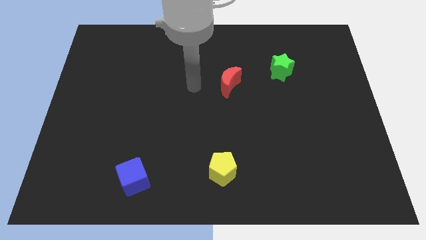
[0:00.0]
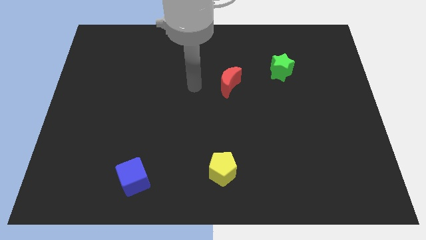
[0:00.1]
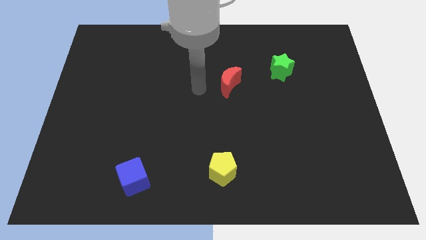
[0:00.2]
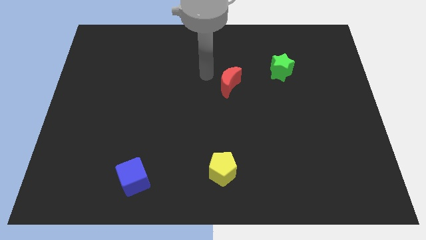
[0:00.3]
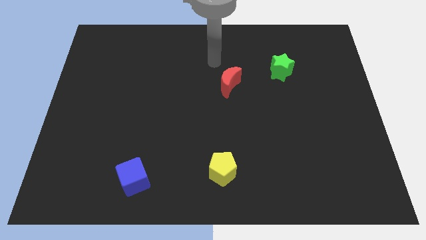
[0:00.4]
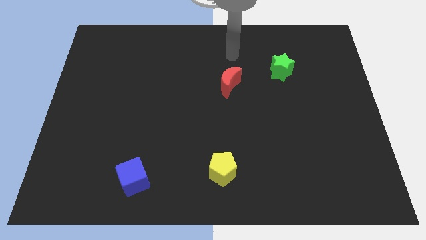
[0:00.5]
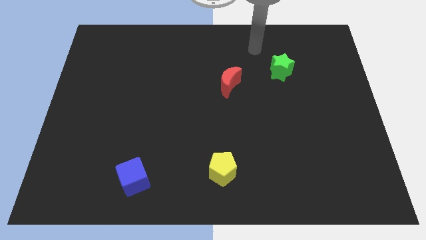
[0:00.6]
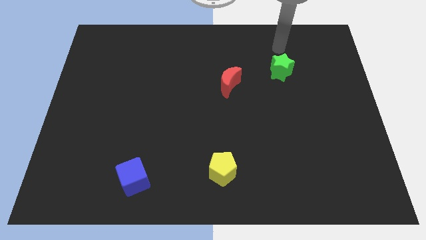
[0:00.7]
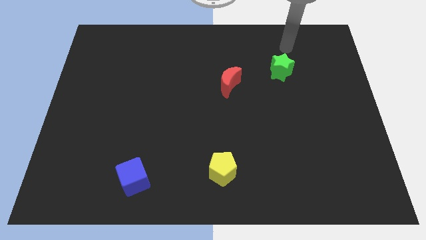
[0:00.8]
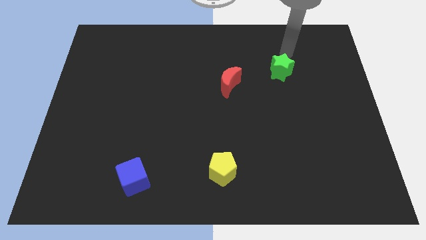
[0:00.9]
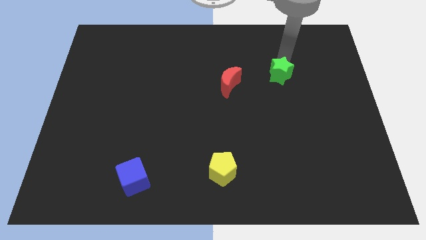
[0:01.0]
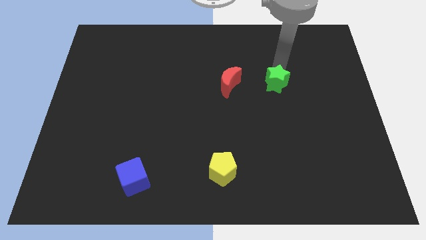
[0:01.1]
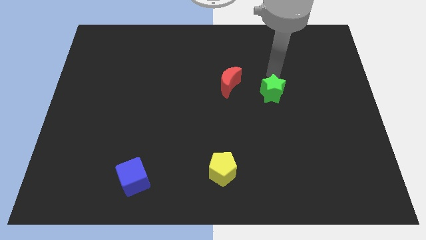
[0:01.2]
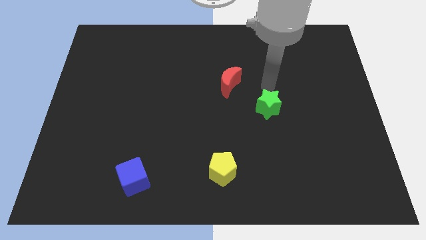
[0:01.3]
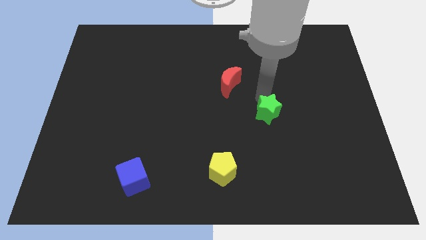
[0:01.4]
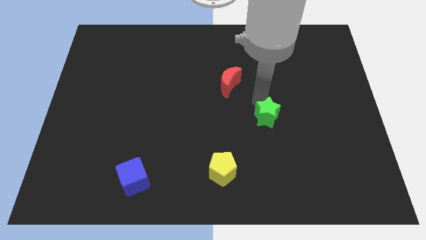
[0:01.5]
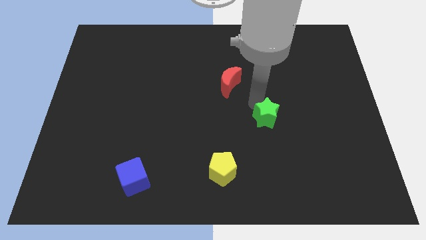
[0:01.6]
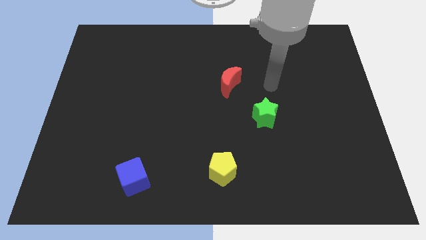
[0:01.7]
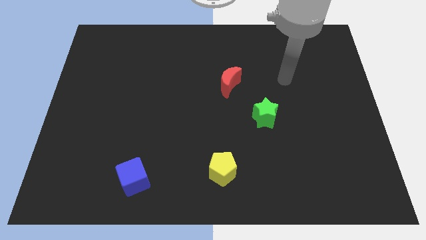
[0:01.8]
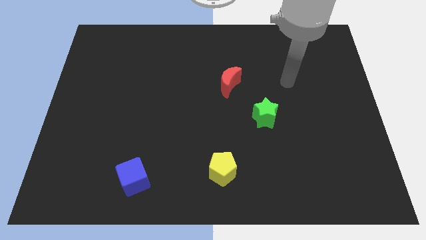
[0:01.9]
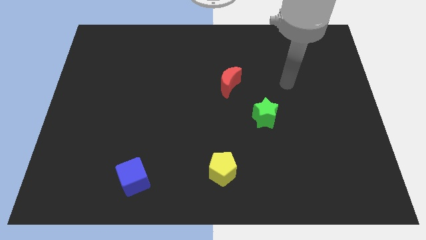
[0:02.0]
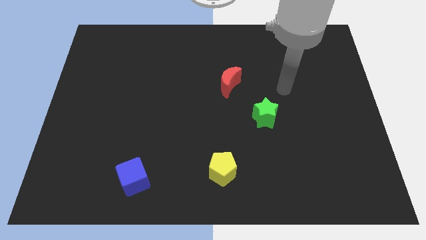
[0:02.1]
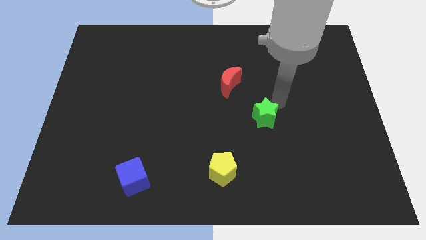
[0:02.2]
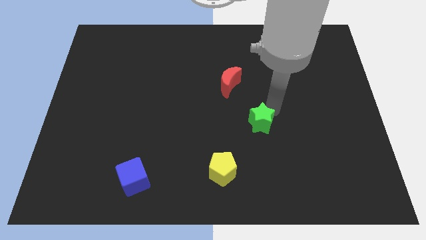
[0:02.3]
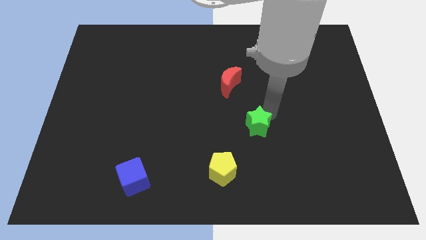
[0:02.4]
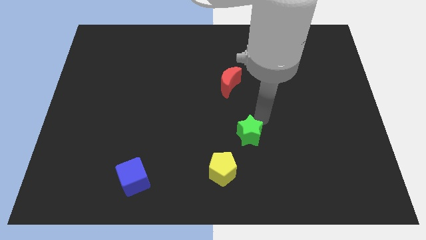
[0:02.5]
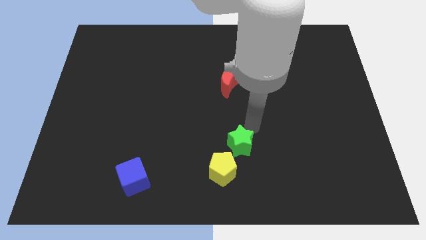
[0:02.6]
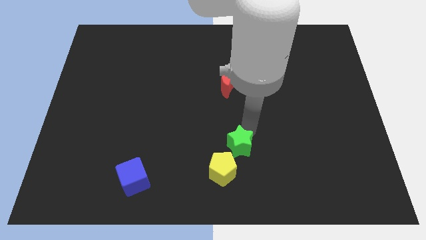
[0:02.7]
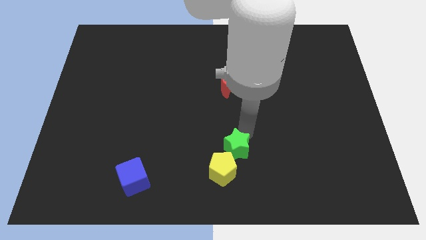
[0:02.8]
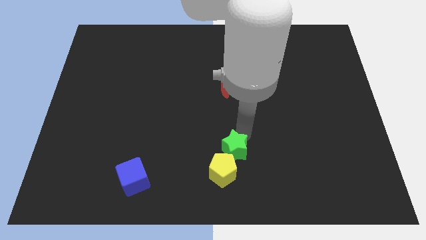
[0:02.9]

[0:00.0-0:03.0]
put the star close to the yellow block

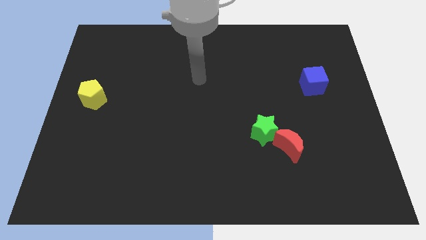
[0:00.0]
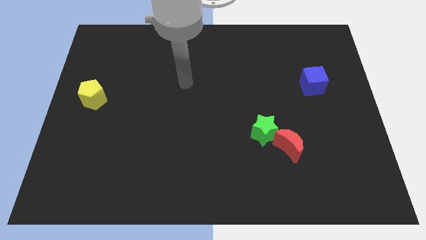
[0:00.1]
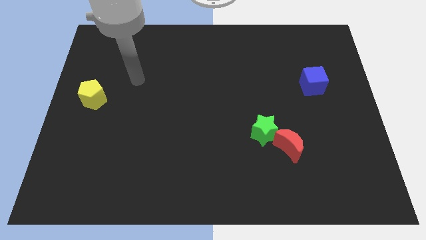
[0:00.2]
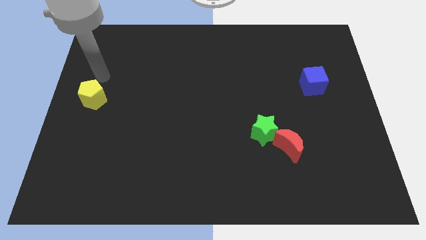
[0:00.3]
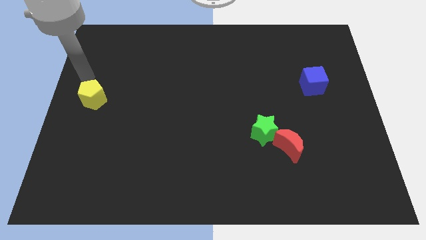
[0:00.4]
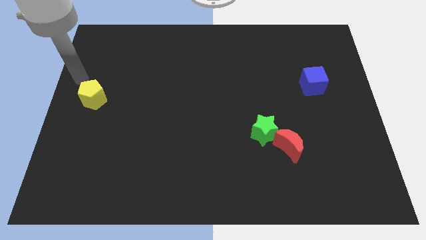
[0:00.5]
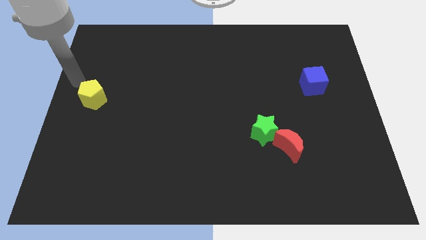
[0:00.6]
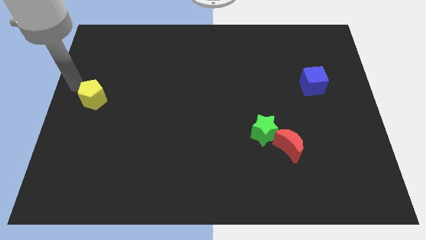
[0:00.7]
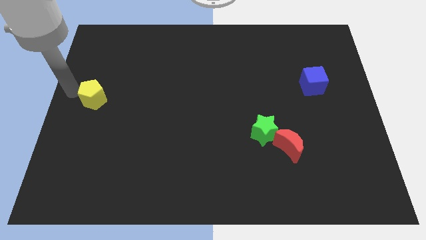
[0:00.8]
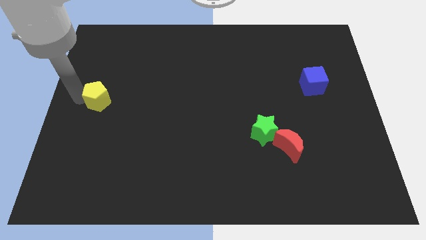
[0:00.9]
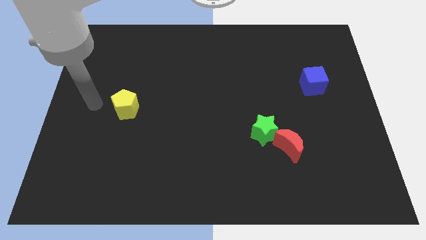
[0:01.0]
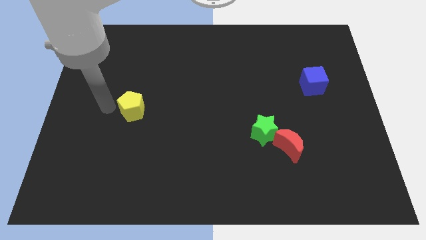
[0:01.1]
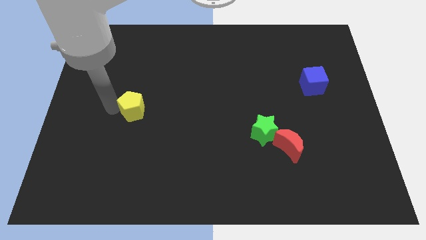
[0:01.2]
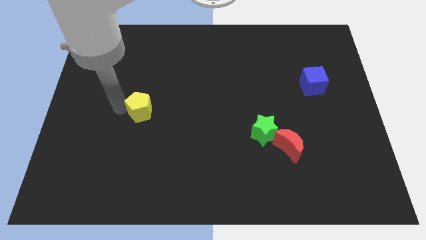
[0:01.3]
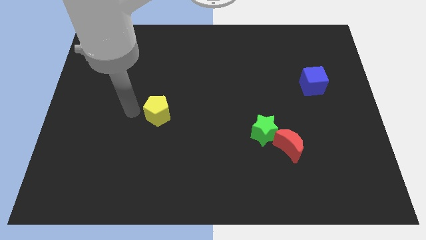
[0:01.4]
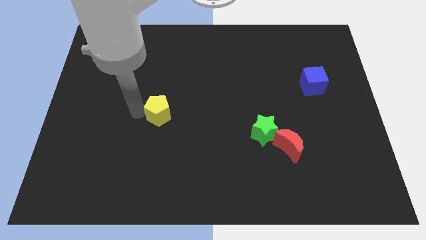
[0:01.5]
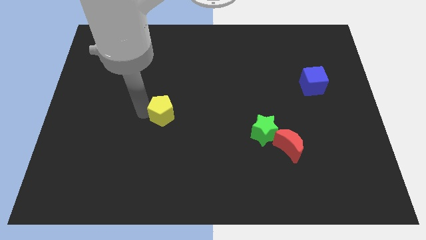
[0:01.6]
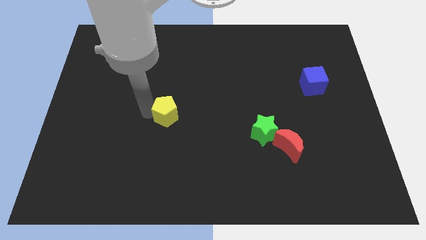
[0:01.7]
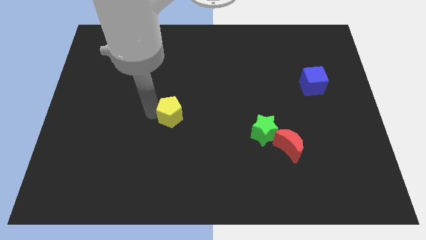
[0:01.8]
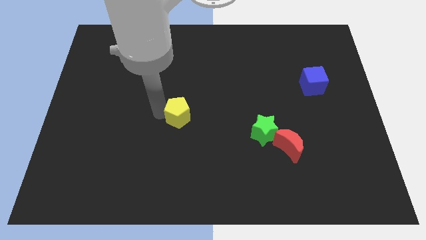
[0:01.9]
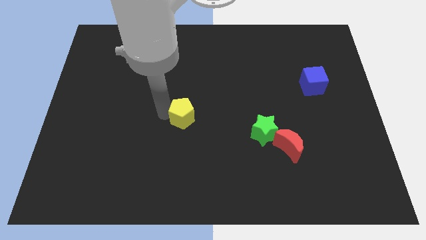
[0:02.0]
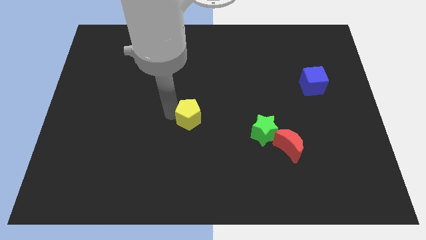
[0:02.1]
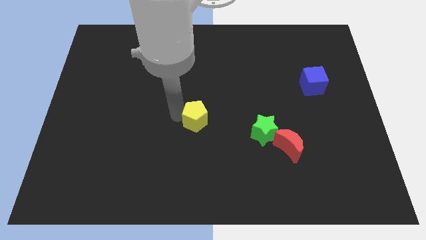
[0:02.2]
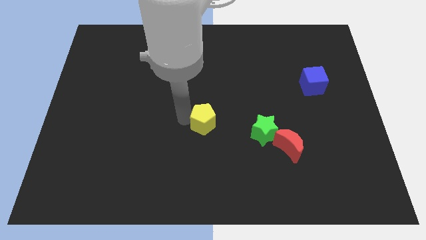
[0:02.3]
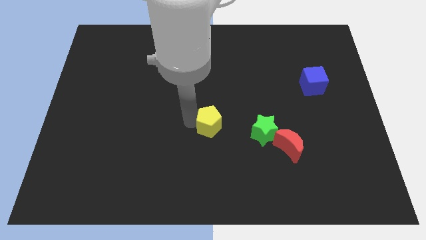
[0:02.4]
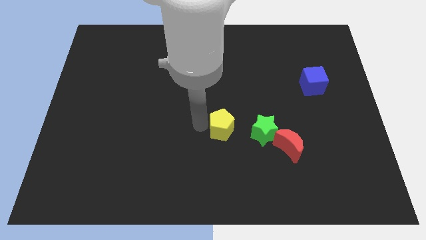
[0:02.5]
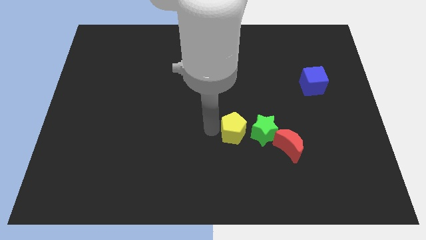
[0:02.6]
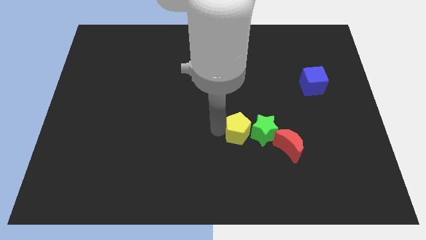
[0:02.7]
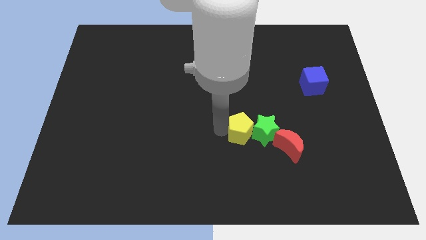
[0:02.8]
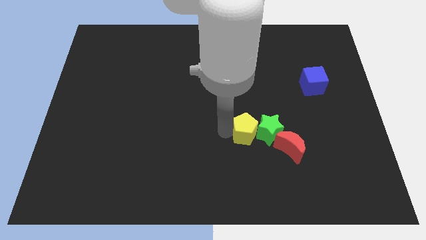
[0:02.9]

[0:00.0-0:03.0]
push the pentagon towards the star

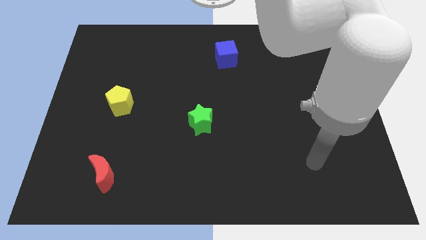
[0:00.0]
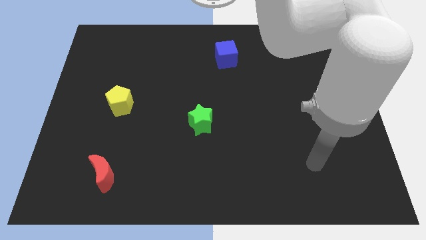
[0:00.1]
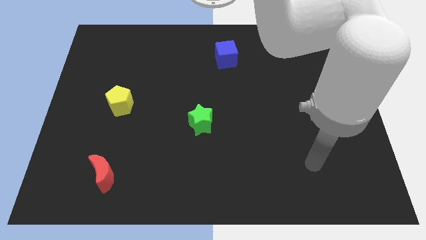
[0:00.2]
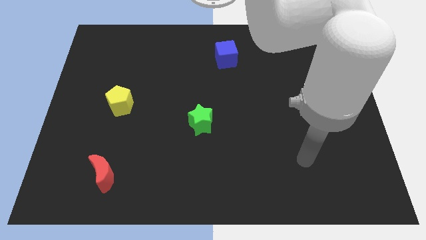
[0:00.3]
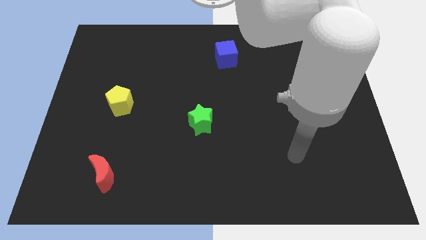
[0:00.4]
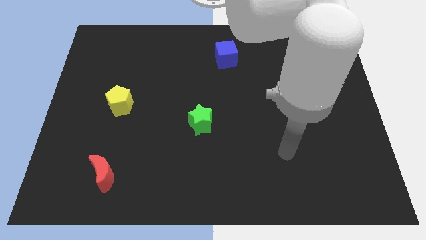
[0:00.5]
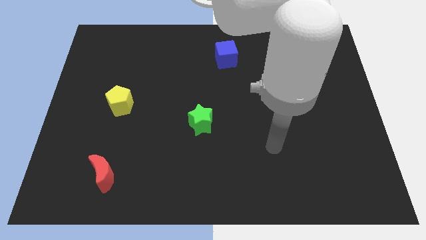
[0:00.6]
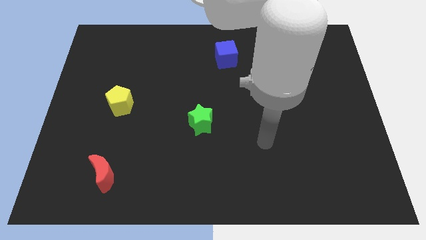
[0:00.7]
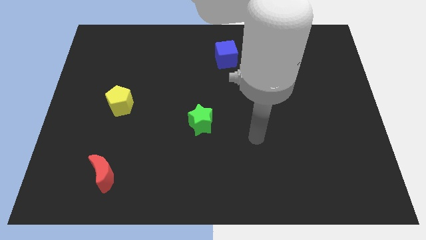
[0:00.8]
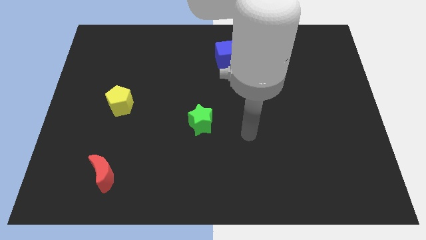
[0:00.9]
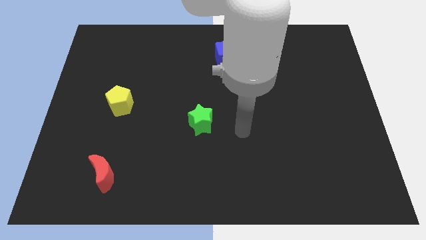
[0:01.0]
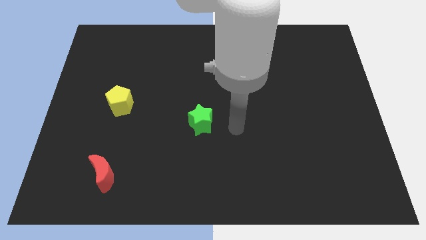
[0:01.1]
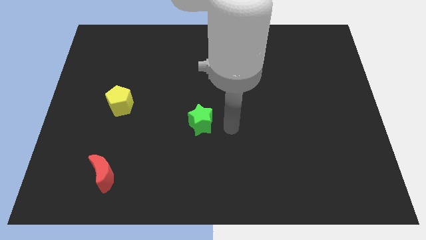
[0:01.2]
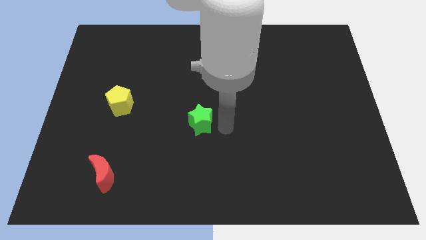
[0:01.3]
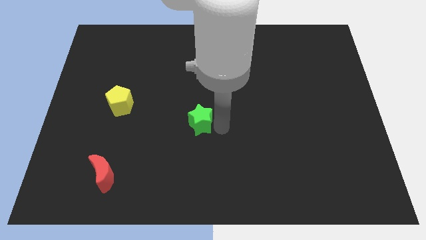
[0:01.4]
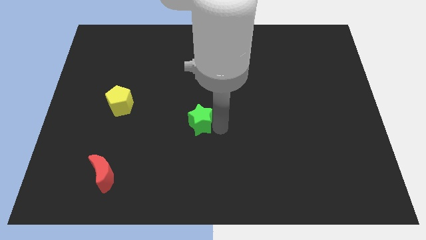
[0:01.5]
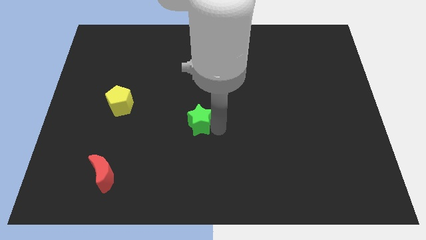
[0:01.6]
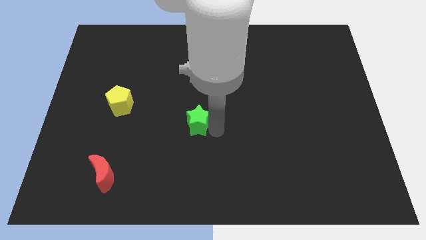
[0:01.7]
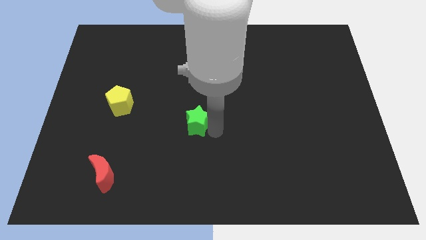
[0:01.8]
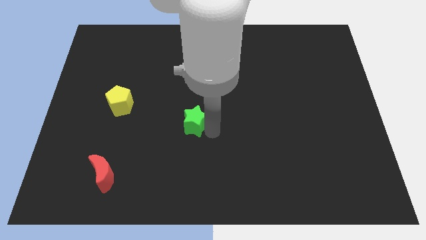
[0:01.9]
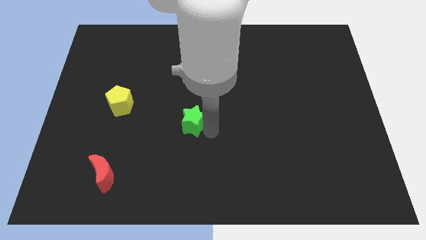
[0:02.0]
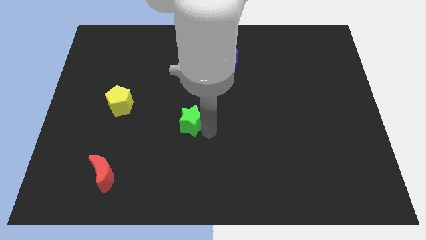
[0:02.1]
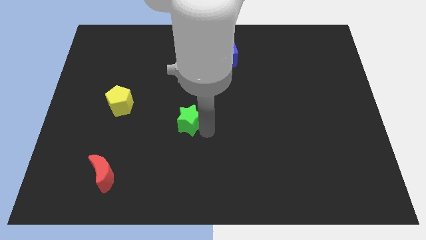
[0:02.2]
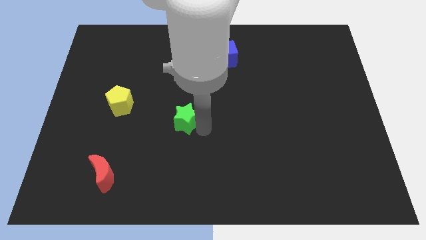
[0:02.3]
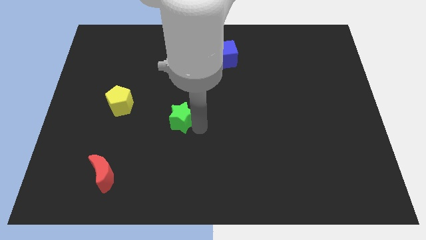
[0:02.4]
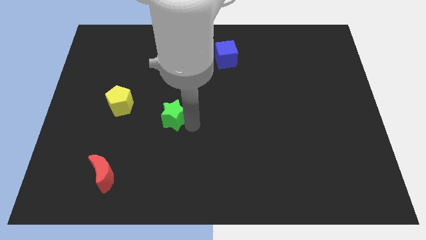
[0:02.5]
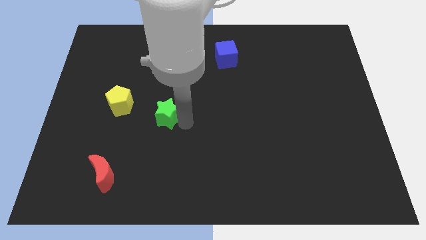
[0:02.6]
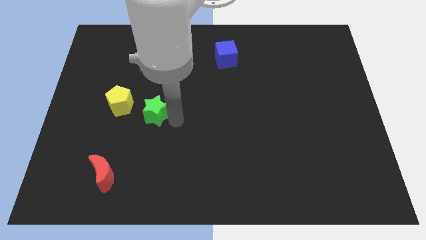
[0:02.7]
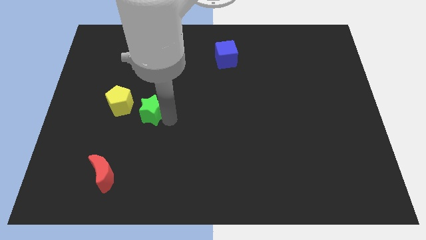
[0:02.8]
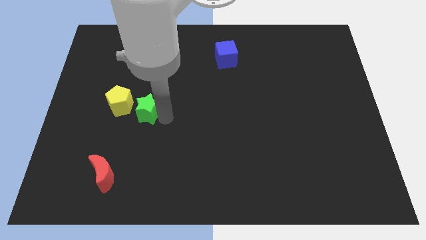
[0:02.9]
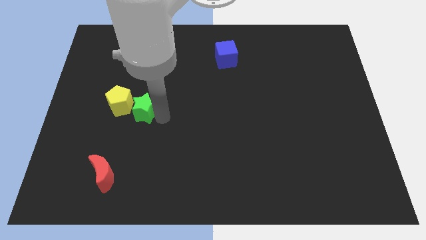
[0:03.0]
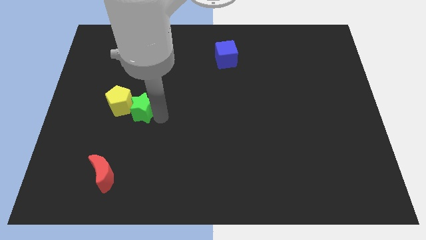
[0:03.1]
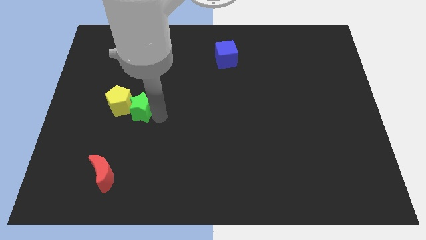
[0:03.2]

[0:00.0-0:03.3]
push the green star close to the yellow pentagon
